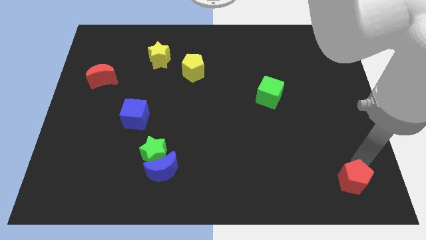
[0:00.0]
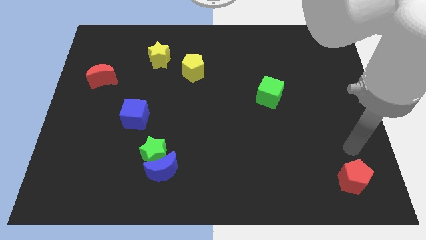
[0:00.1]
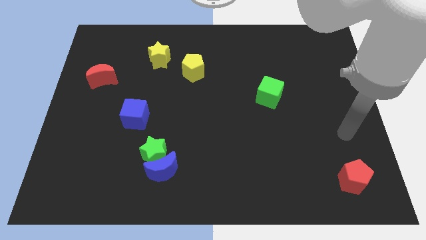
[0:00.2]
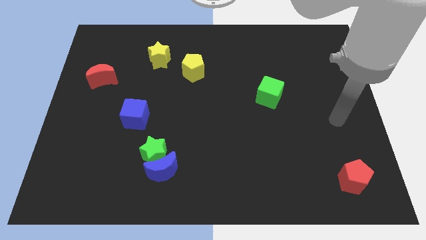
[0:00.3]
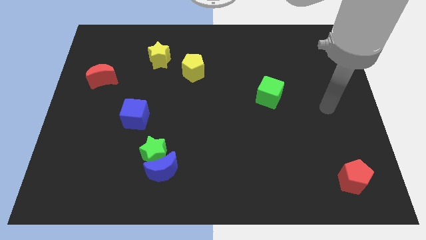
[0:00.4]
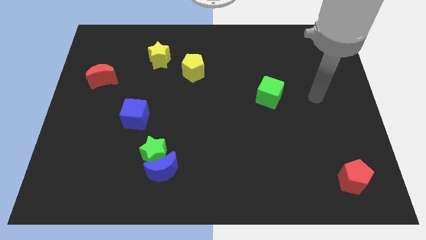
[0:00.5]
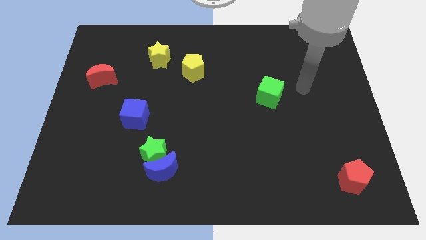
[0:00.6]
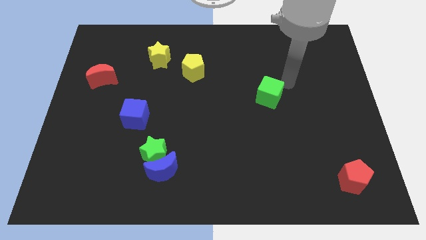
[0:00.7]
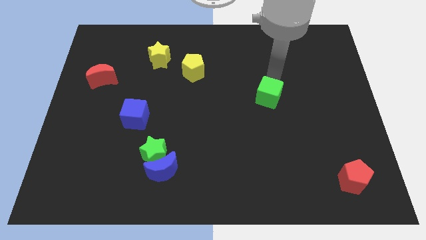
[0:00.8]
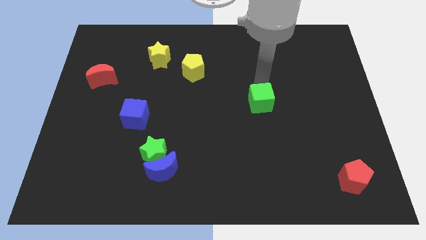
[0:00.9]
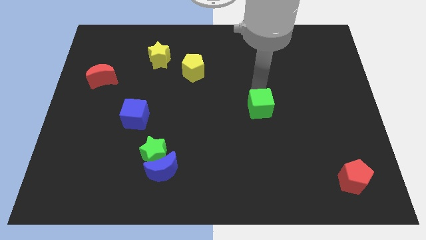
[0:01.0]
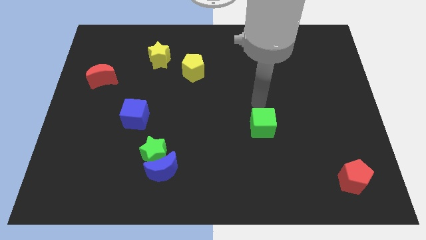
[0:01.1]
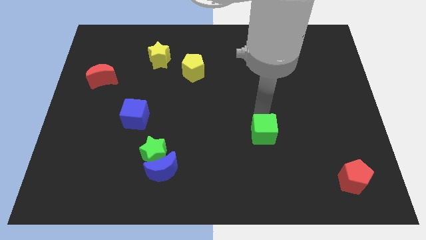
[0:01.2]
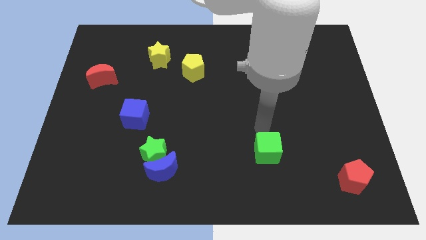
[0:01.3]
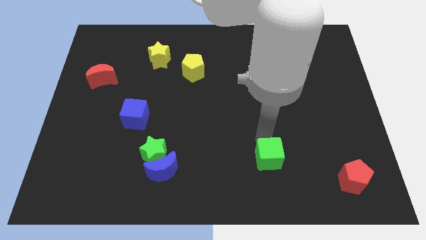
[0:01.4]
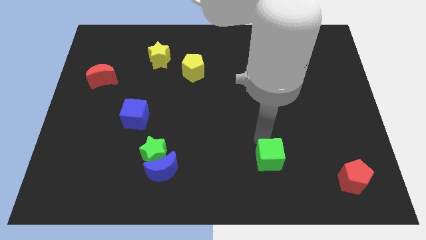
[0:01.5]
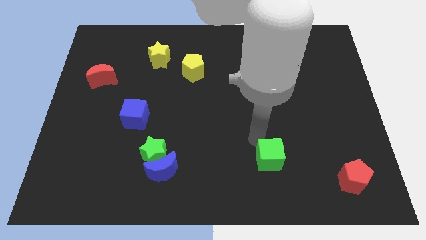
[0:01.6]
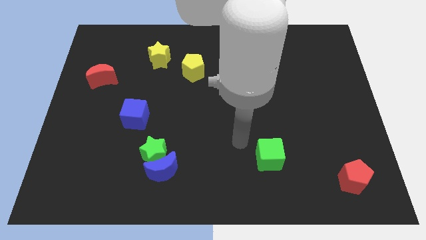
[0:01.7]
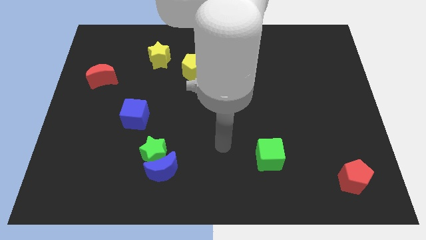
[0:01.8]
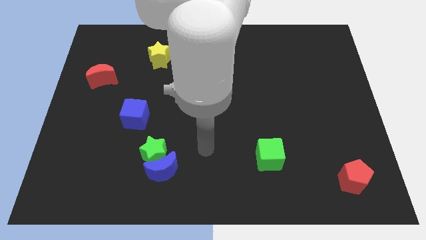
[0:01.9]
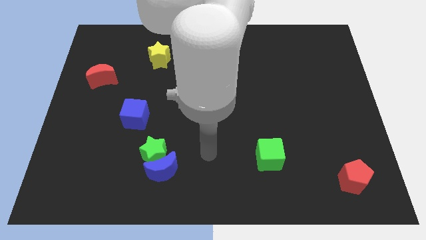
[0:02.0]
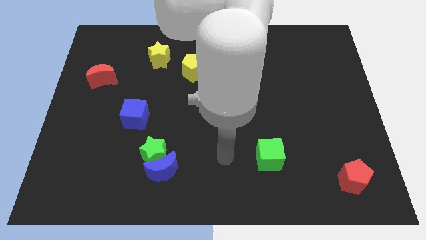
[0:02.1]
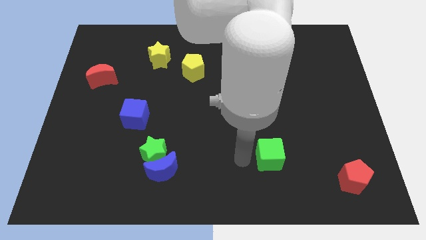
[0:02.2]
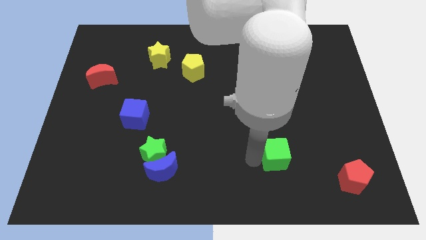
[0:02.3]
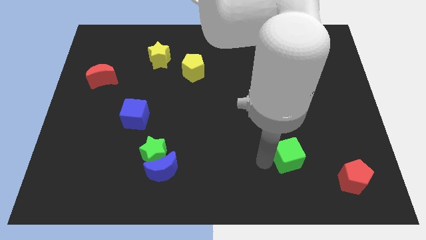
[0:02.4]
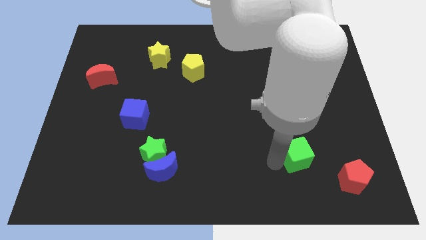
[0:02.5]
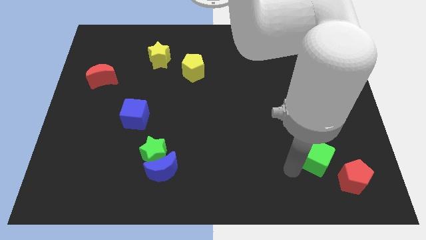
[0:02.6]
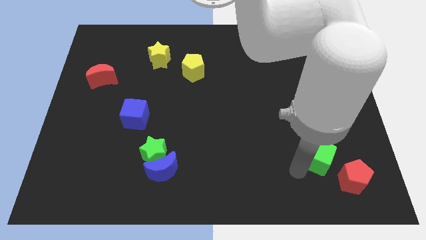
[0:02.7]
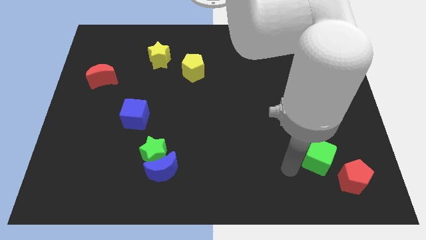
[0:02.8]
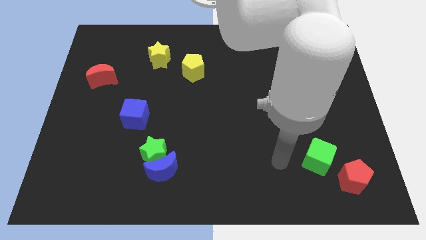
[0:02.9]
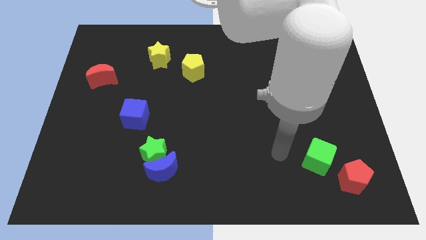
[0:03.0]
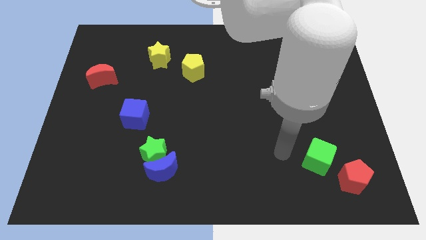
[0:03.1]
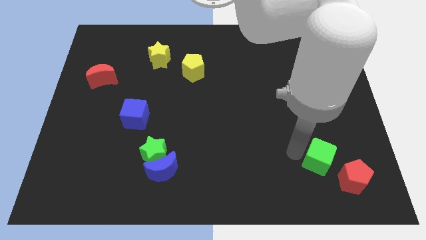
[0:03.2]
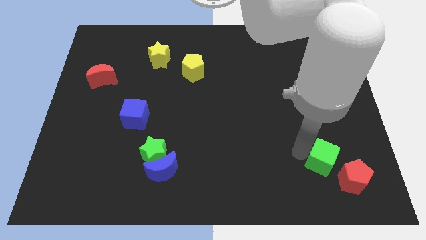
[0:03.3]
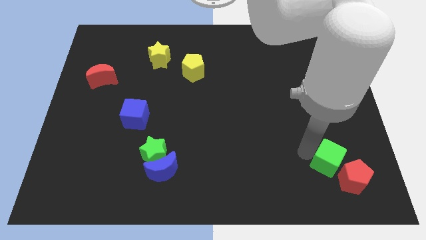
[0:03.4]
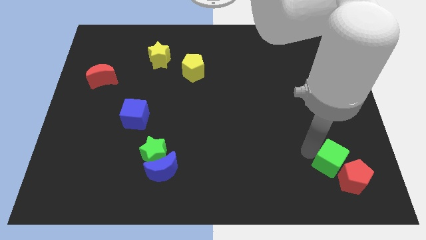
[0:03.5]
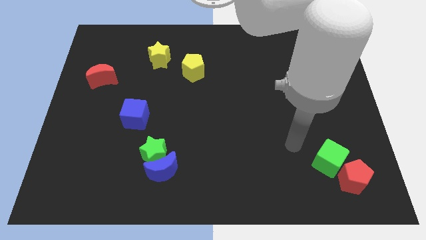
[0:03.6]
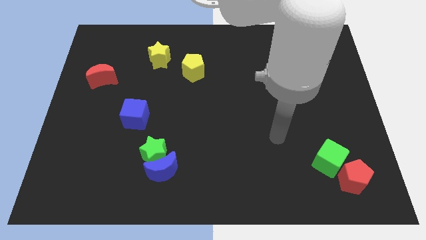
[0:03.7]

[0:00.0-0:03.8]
place the green cube diagonal left of red pentagon

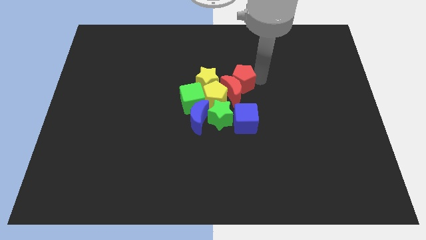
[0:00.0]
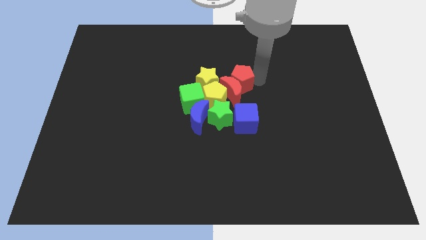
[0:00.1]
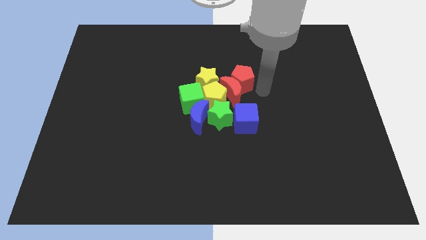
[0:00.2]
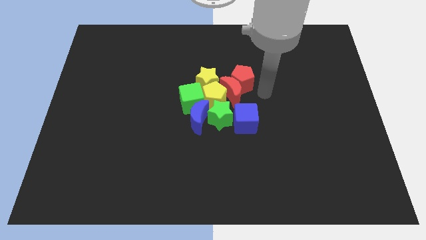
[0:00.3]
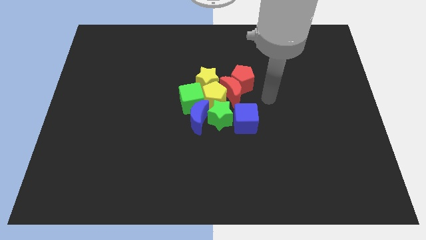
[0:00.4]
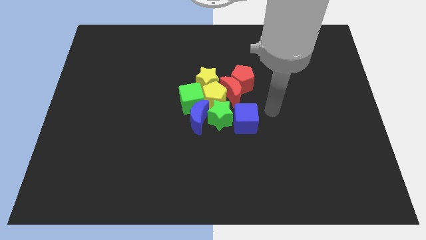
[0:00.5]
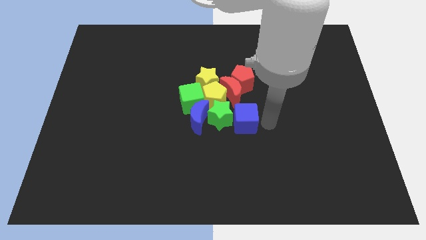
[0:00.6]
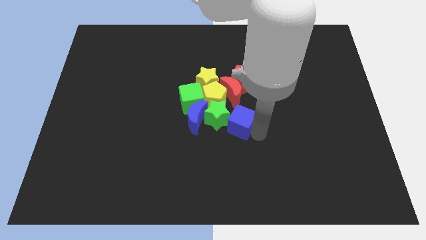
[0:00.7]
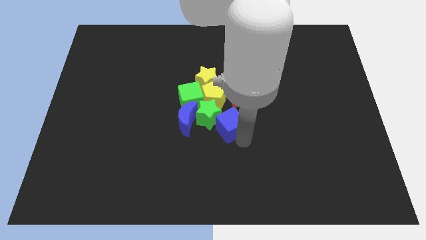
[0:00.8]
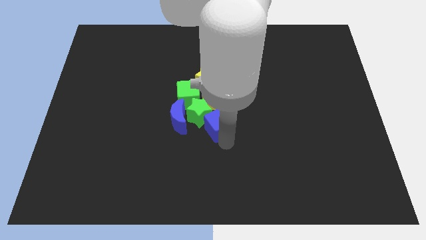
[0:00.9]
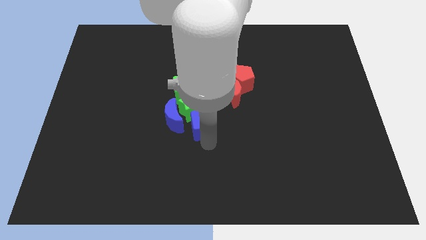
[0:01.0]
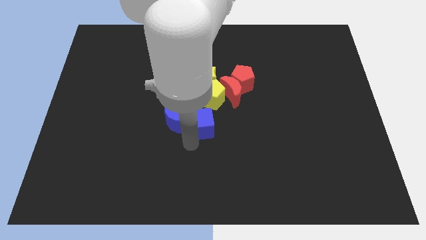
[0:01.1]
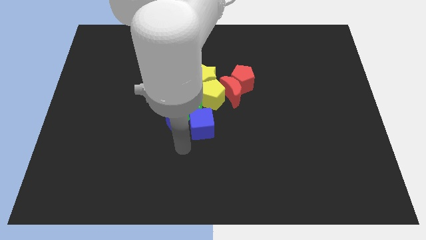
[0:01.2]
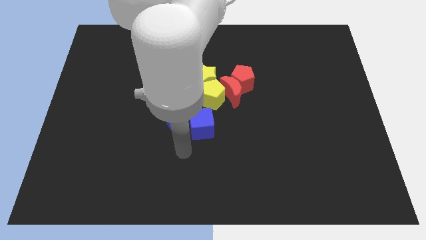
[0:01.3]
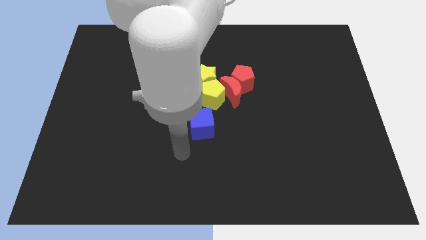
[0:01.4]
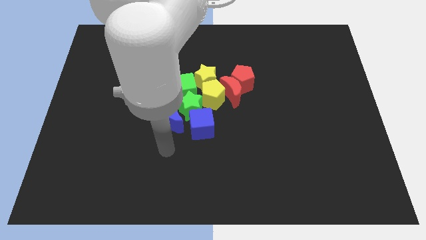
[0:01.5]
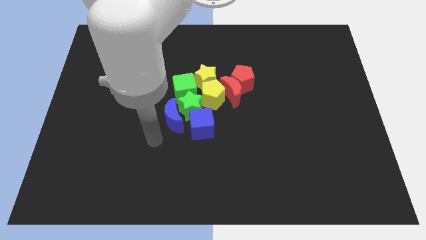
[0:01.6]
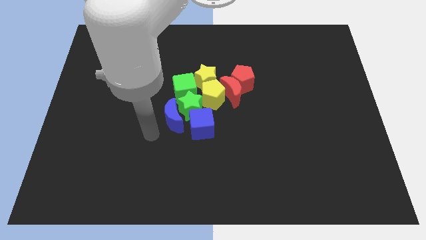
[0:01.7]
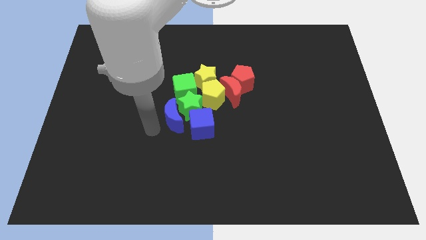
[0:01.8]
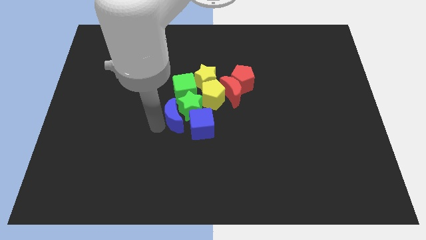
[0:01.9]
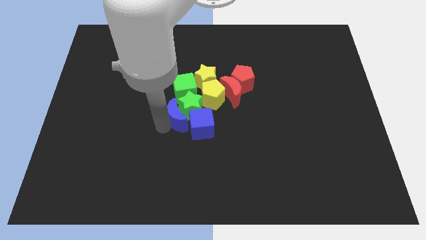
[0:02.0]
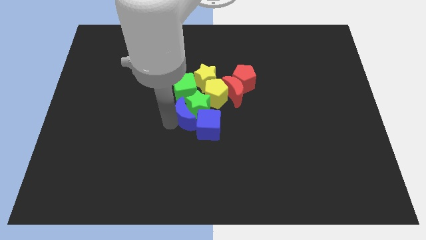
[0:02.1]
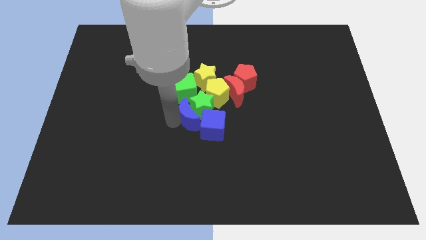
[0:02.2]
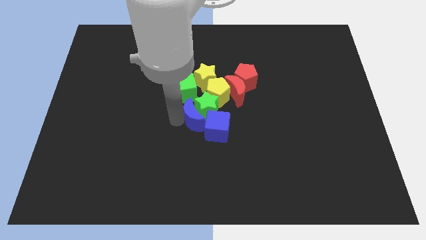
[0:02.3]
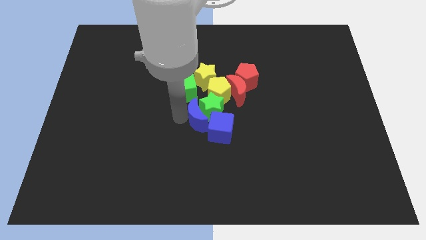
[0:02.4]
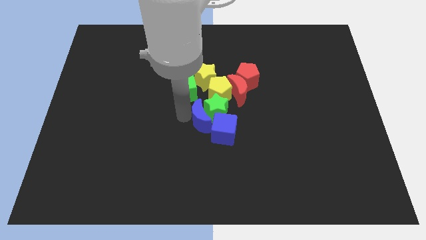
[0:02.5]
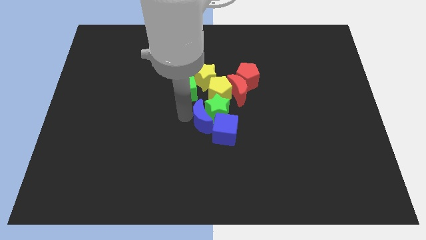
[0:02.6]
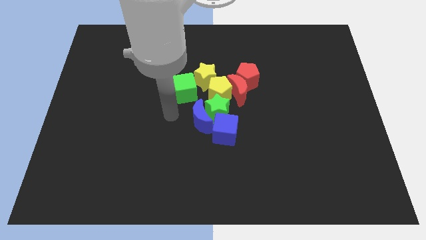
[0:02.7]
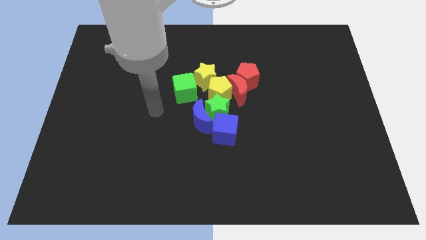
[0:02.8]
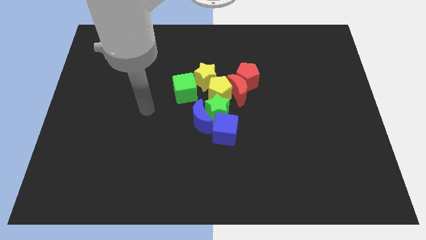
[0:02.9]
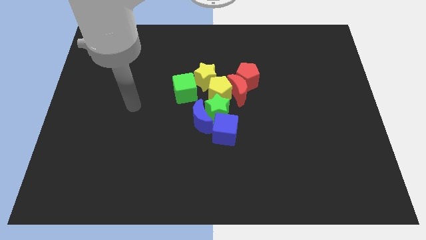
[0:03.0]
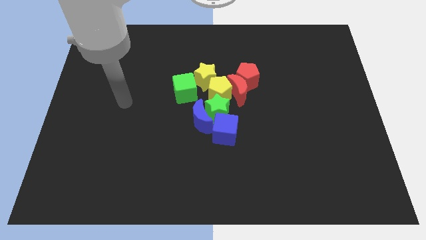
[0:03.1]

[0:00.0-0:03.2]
adjust the blocks to form a group

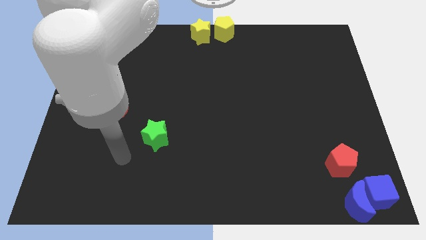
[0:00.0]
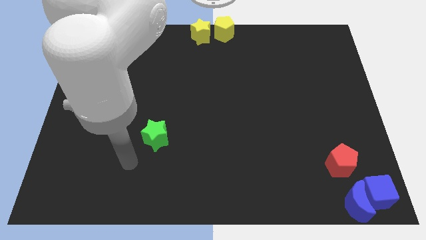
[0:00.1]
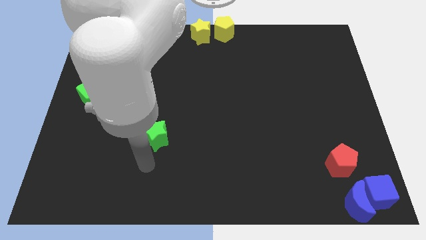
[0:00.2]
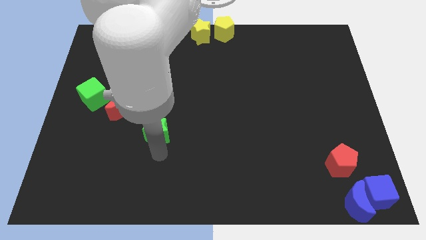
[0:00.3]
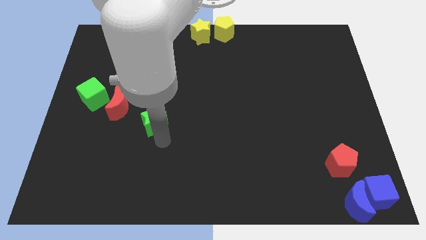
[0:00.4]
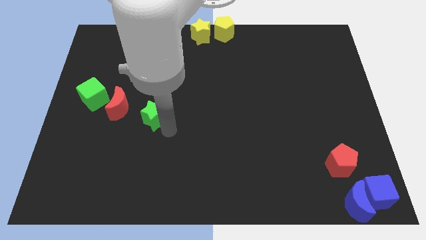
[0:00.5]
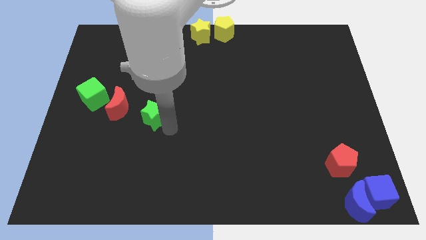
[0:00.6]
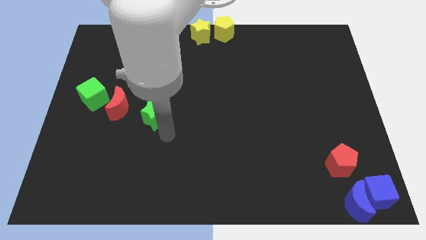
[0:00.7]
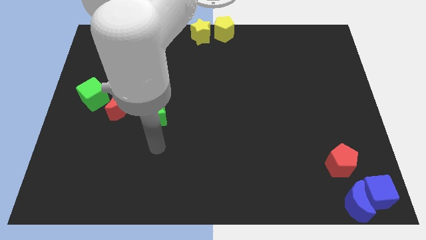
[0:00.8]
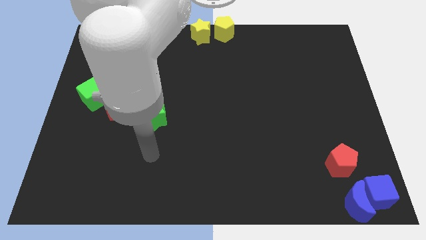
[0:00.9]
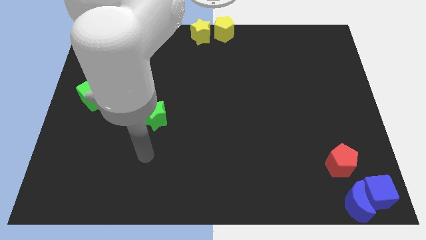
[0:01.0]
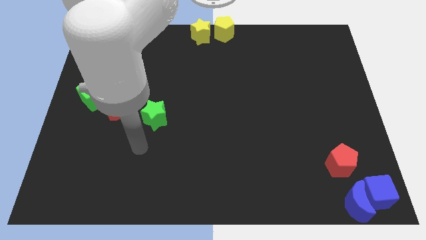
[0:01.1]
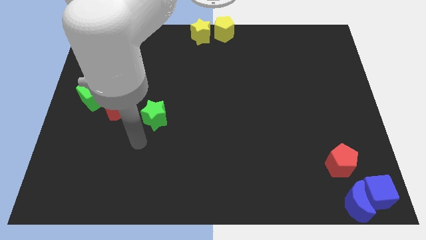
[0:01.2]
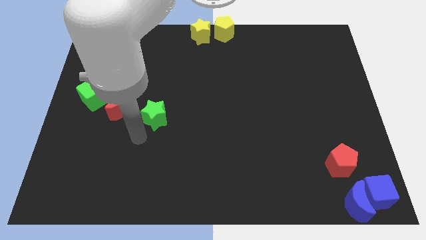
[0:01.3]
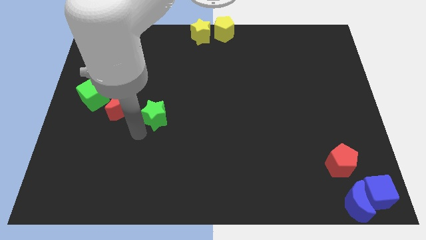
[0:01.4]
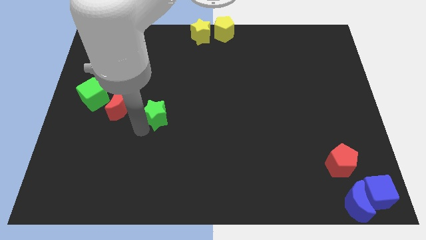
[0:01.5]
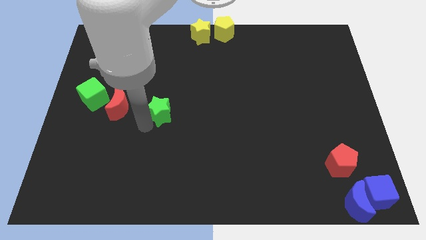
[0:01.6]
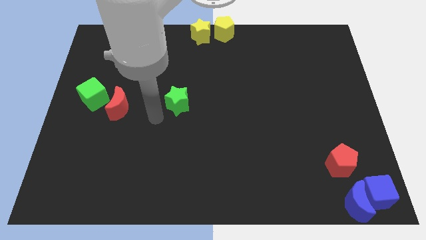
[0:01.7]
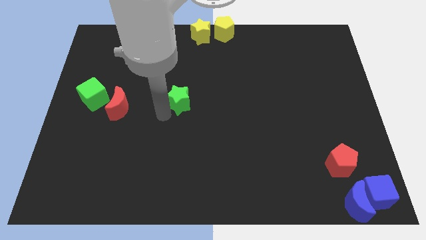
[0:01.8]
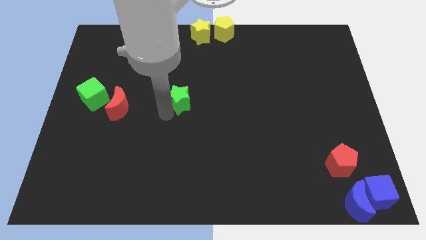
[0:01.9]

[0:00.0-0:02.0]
move the green star slightly top side
